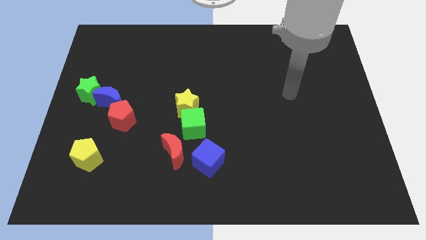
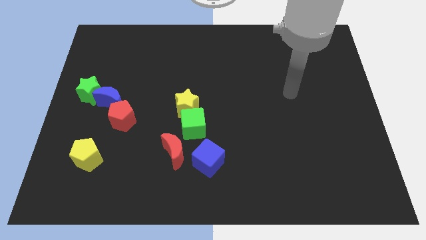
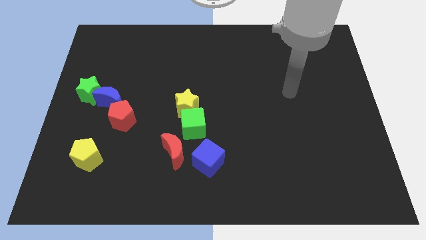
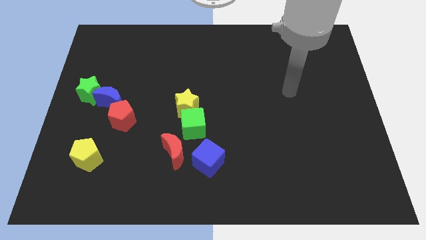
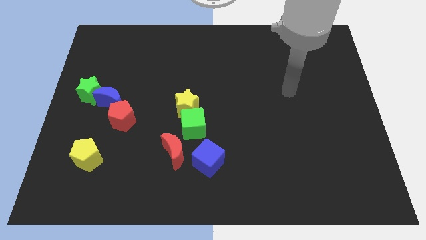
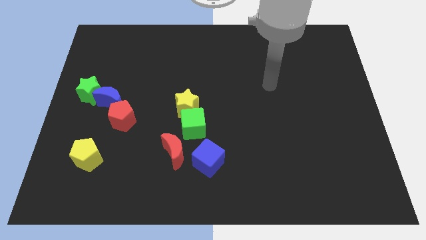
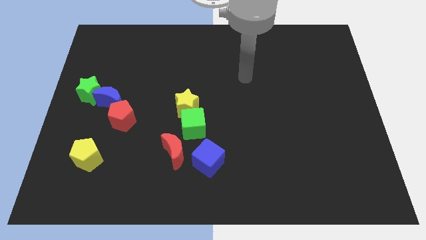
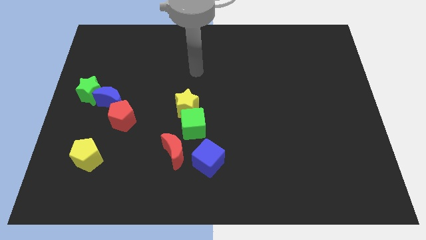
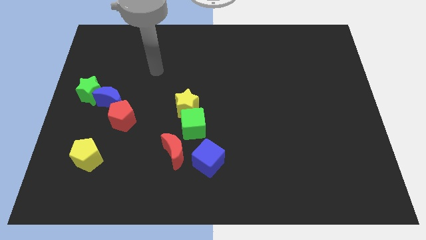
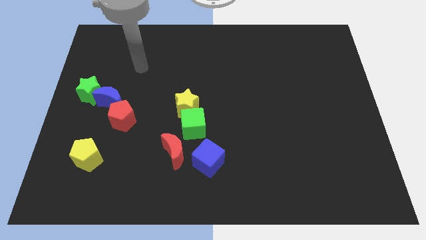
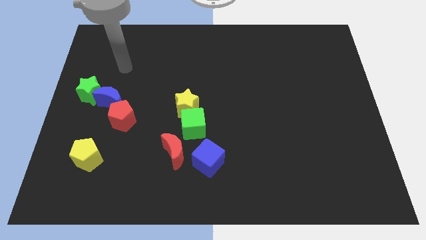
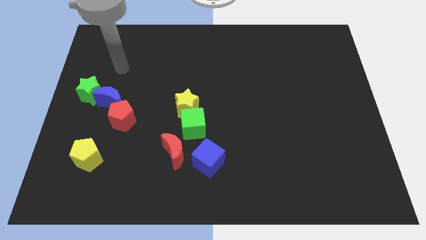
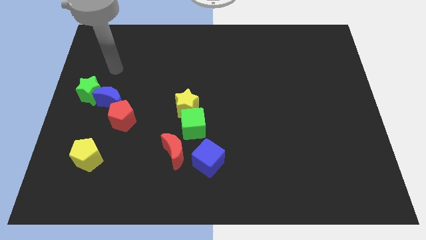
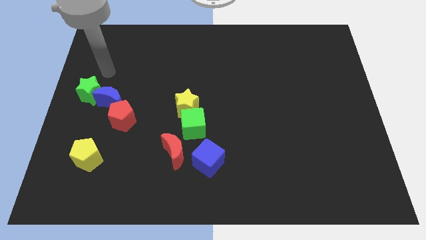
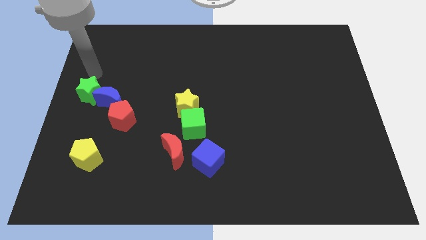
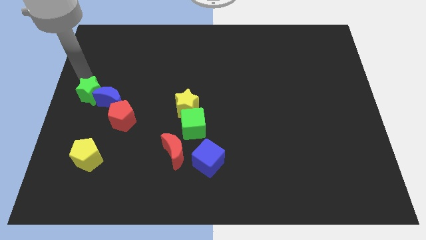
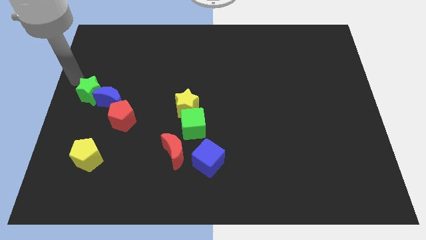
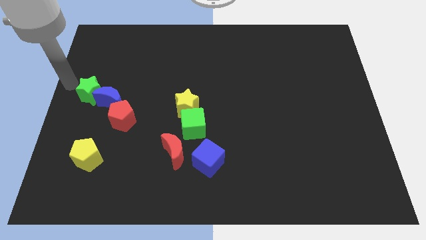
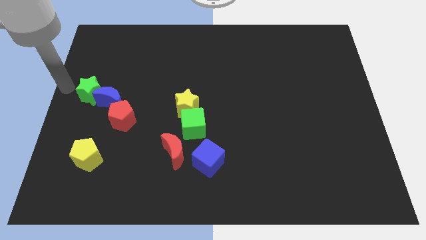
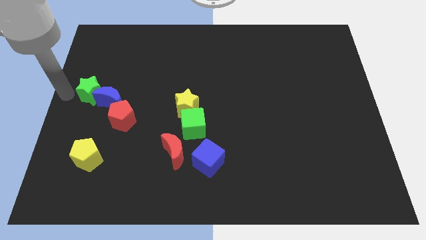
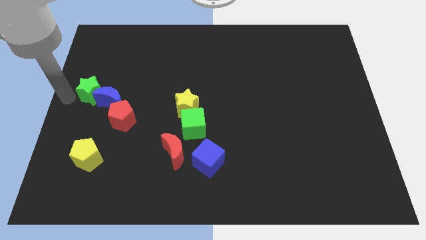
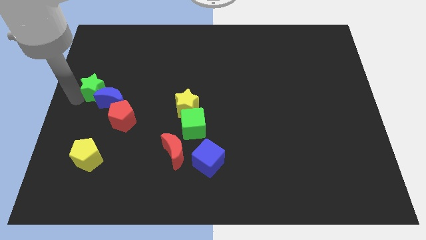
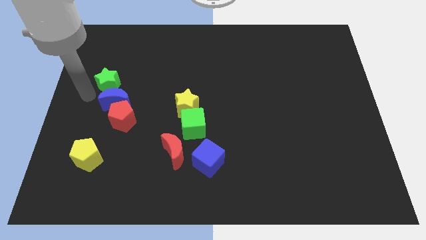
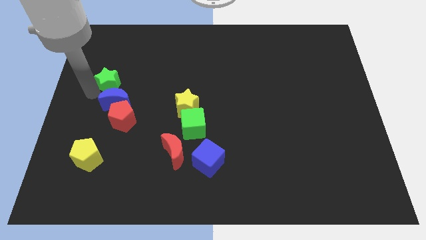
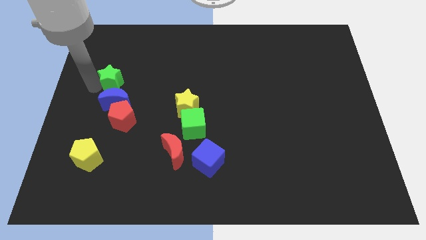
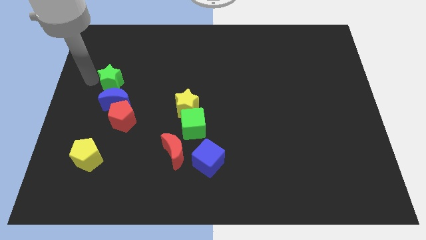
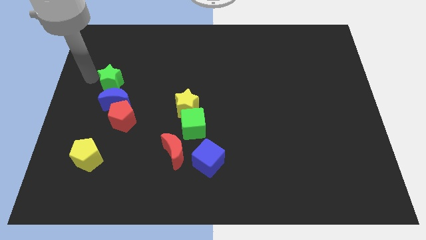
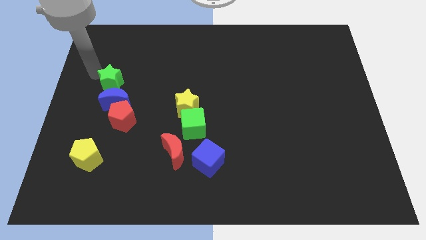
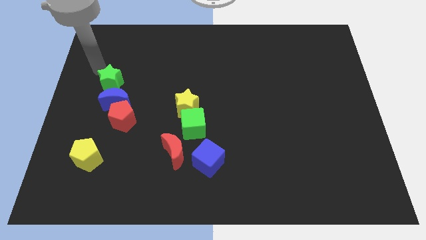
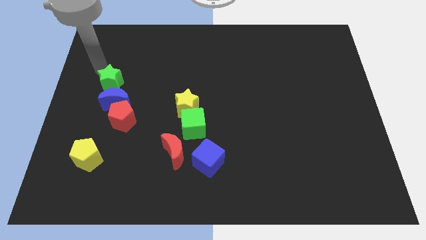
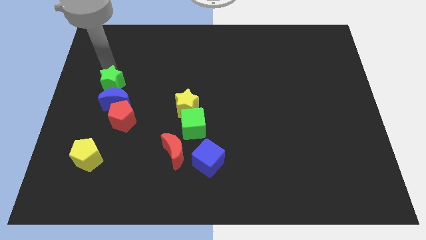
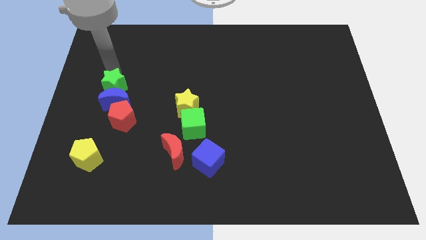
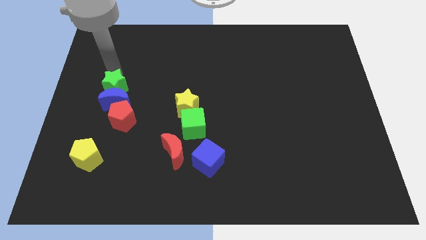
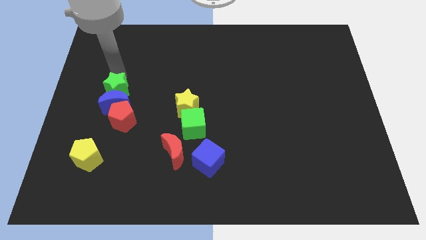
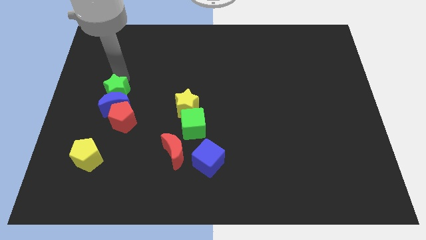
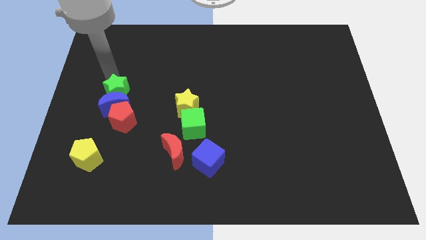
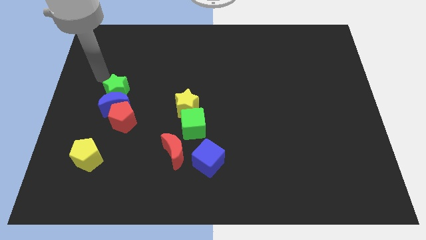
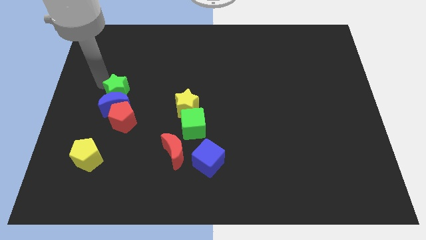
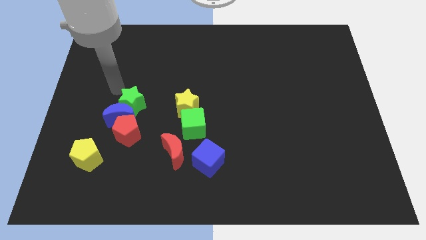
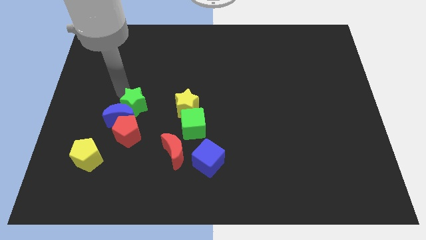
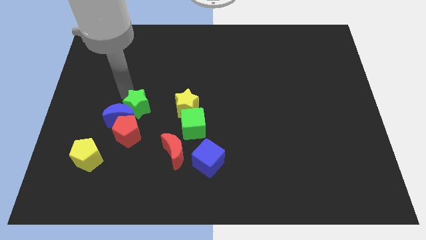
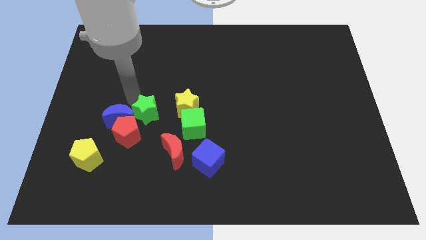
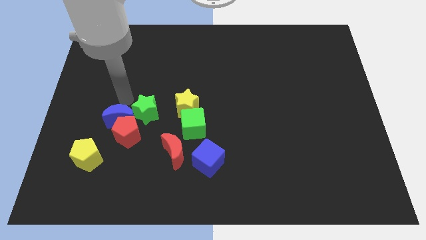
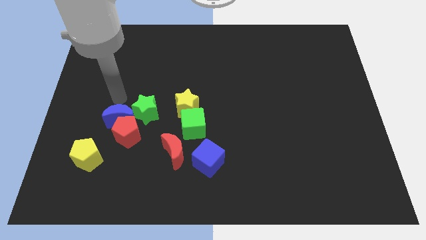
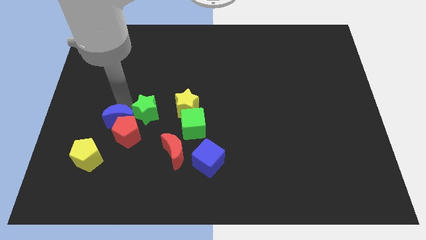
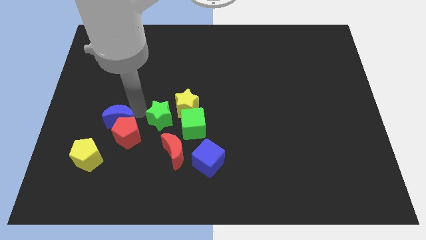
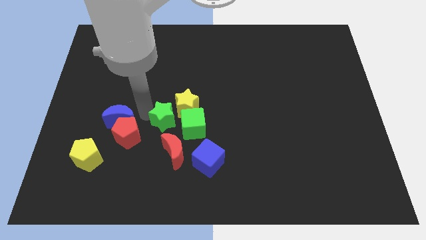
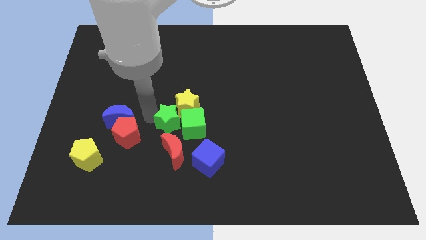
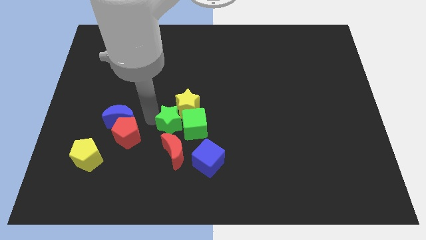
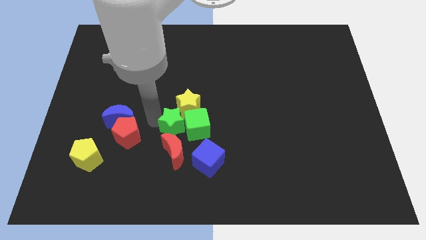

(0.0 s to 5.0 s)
push the green star to the green cube

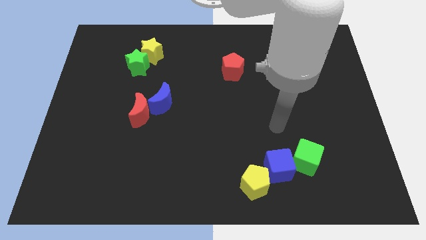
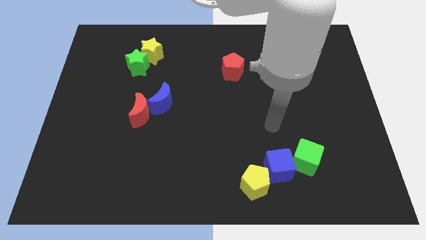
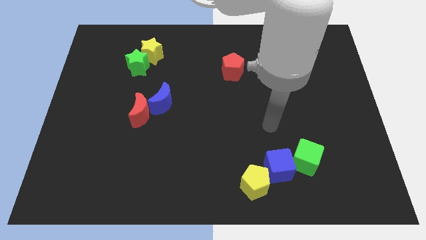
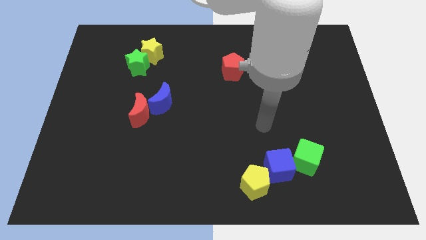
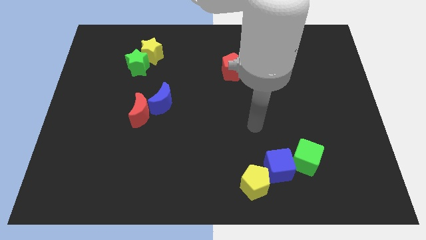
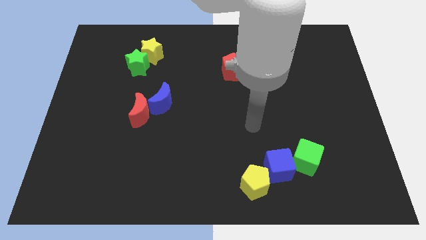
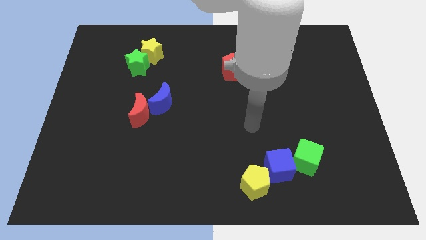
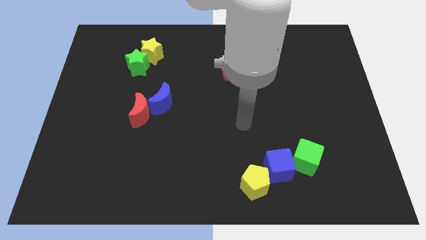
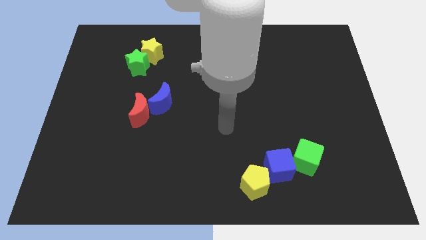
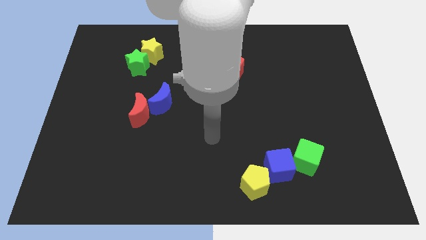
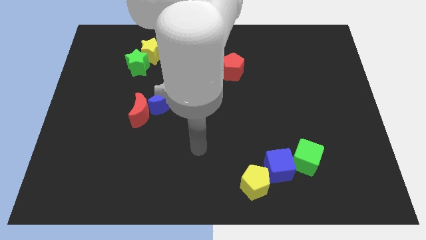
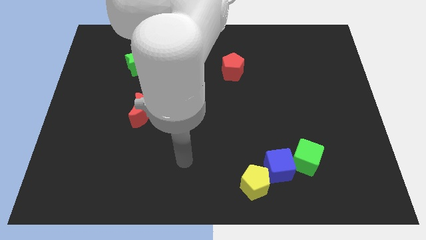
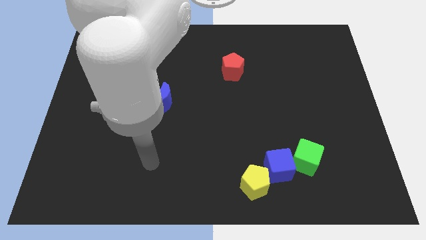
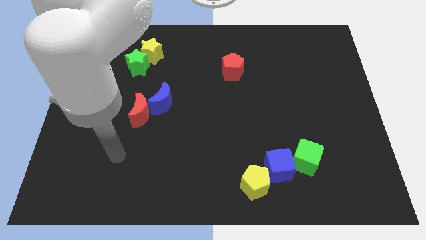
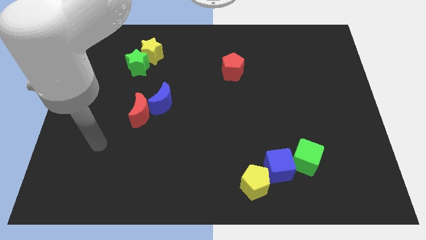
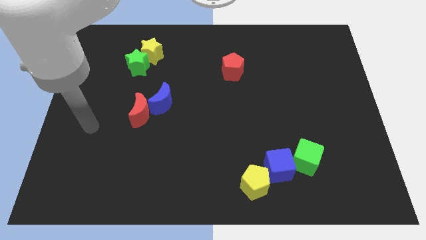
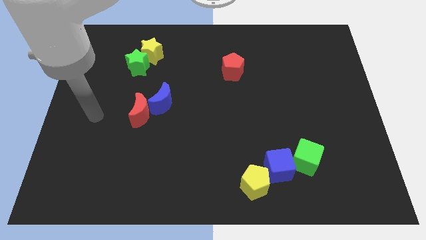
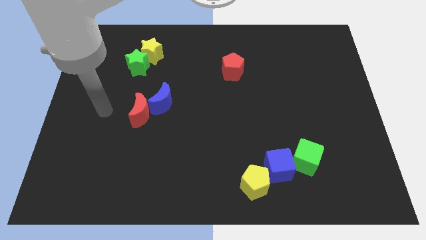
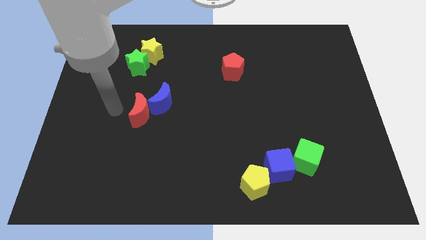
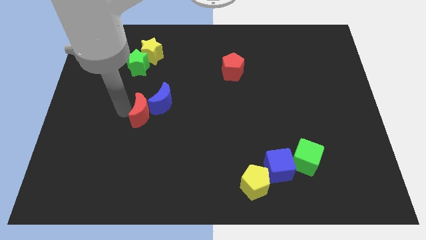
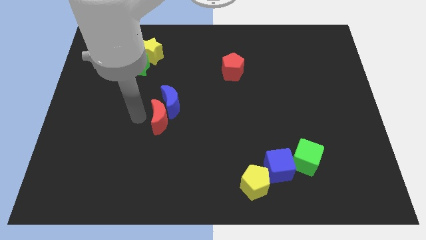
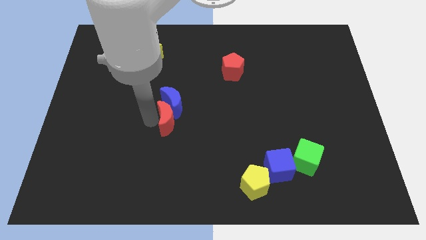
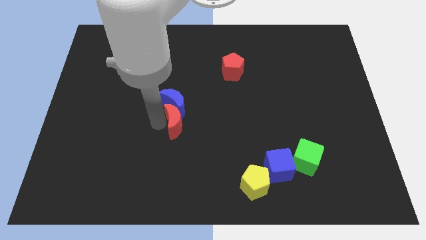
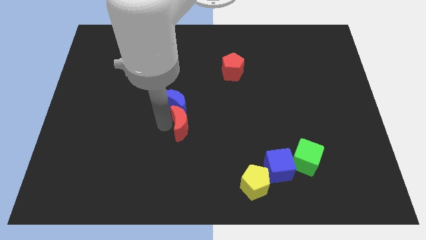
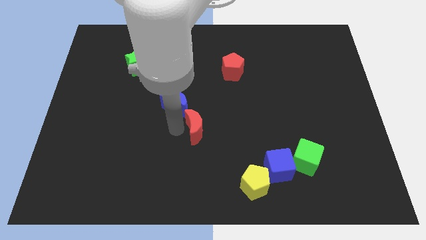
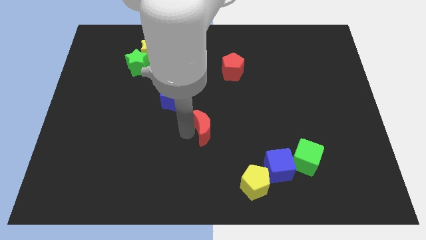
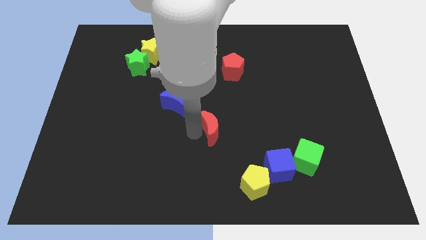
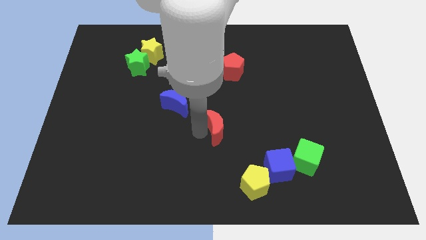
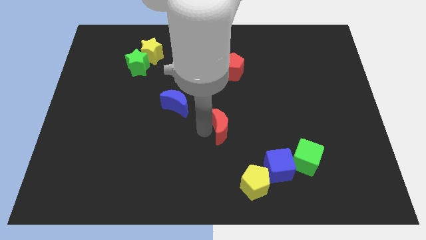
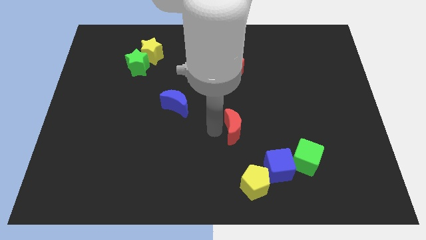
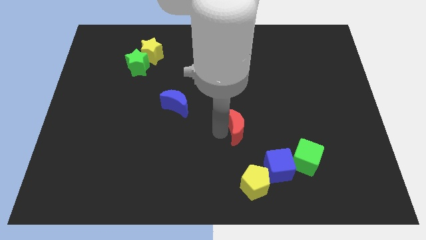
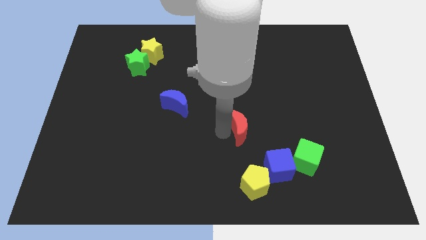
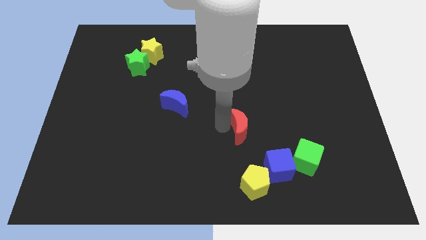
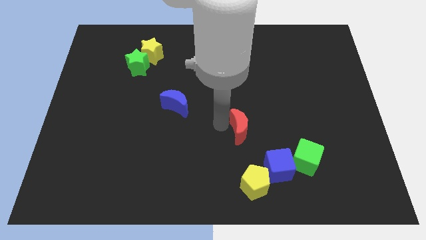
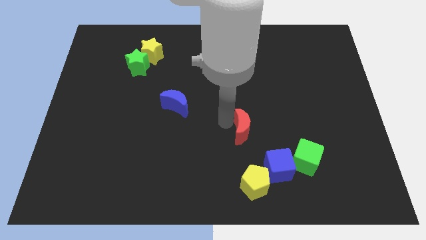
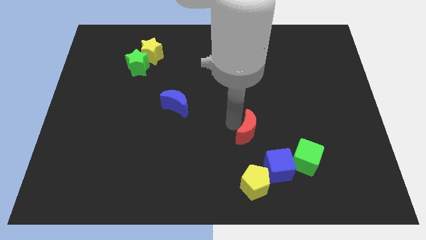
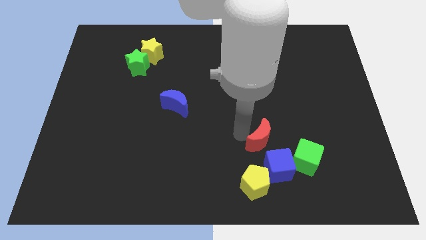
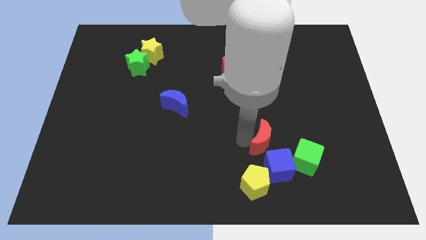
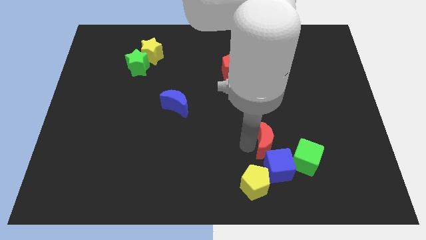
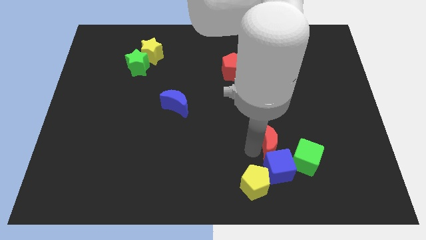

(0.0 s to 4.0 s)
move the red moon towards the blue cube
